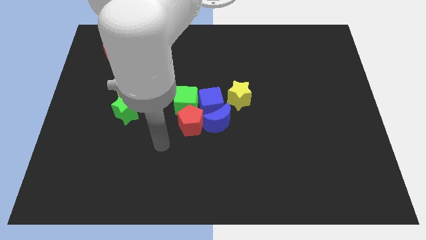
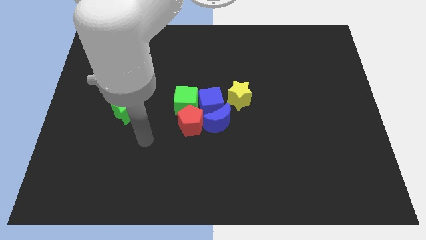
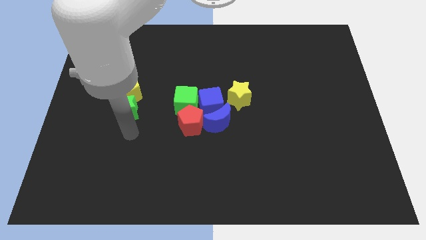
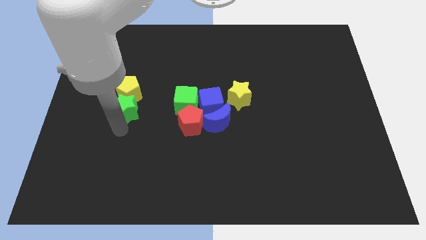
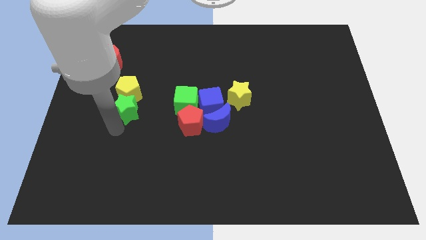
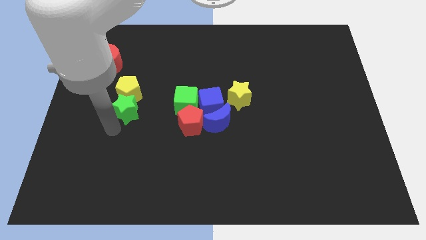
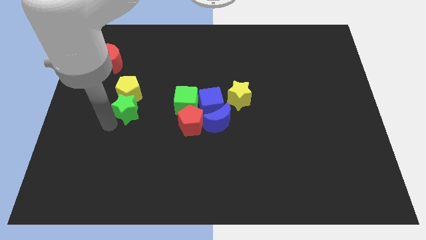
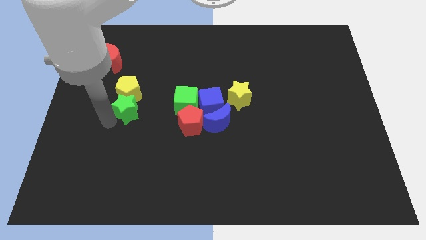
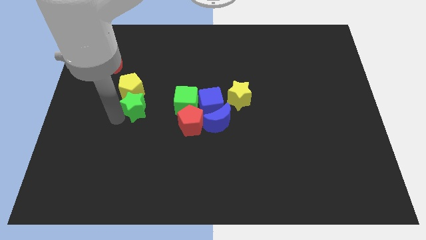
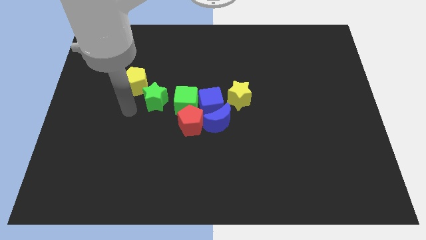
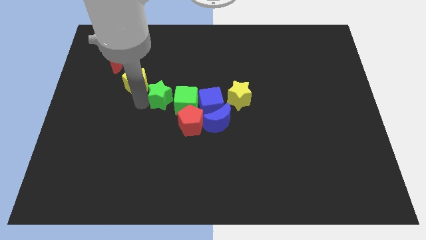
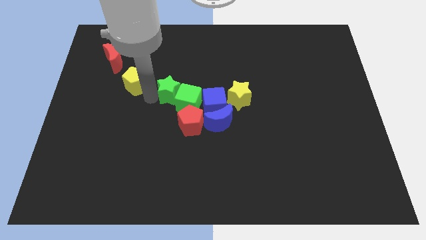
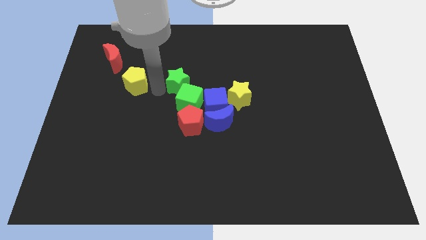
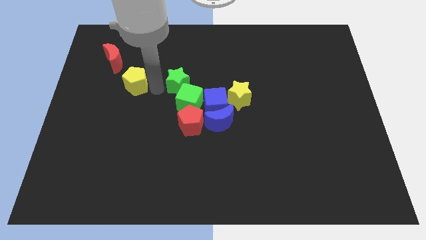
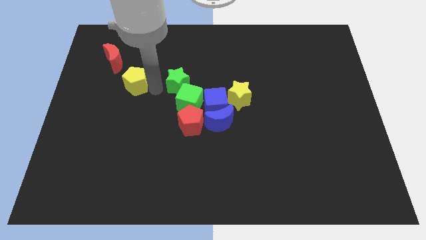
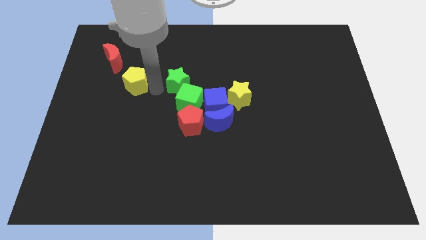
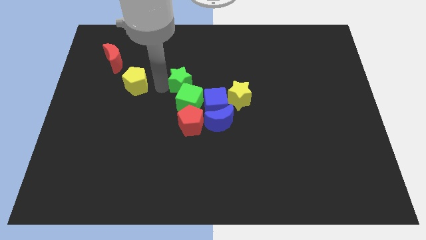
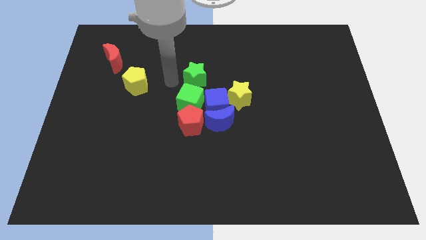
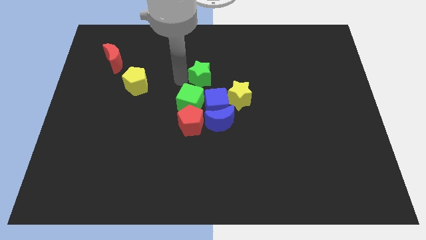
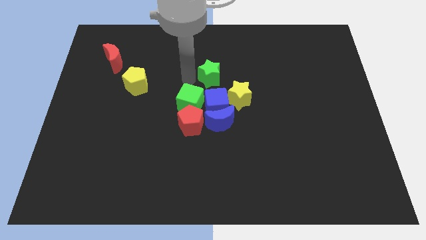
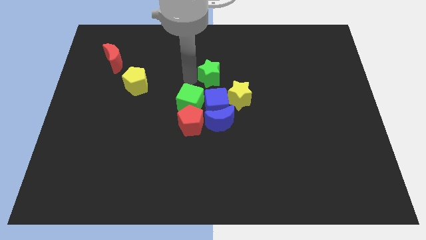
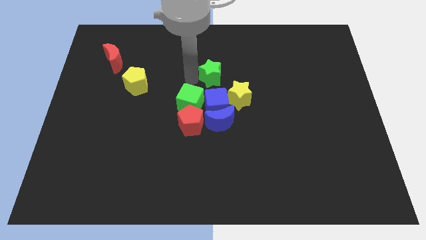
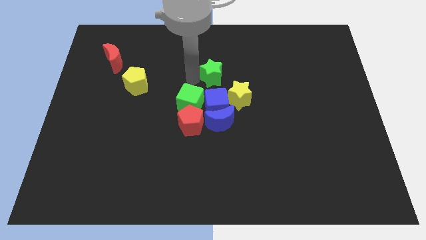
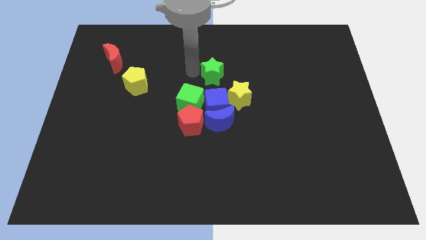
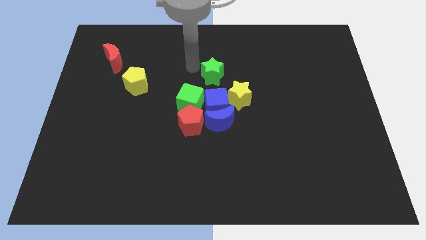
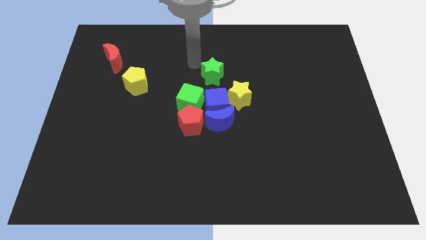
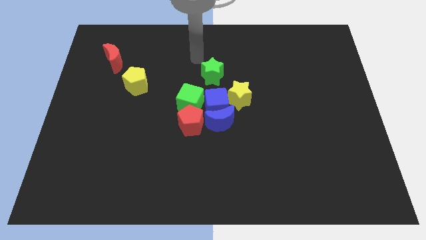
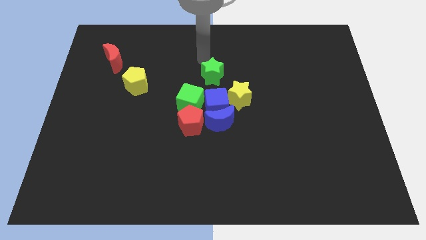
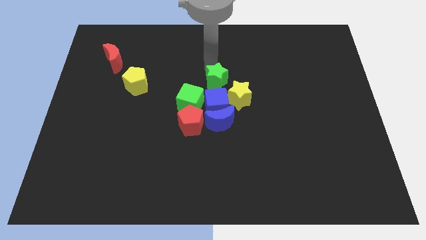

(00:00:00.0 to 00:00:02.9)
place the green star at the top of the blue cube

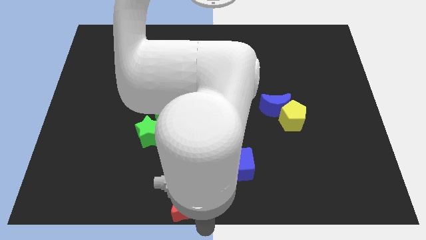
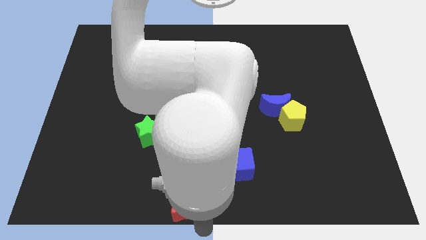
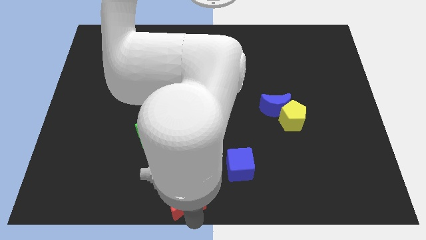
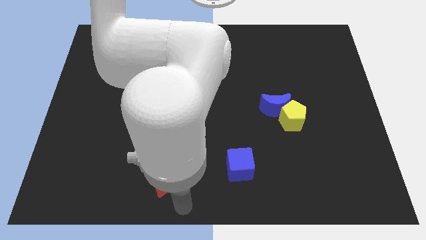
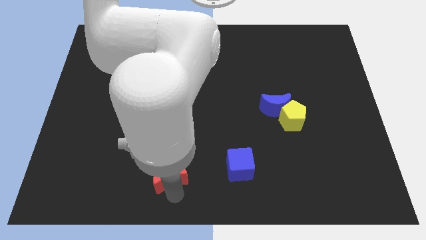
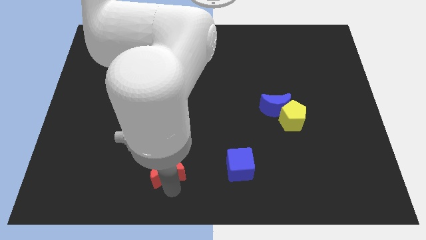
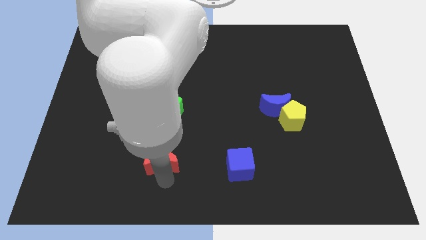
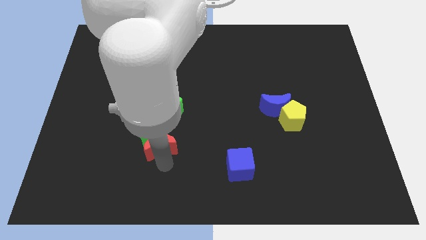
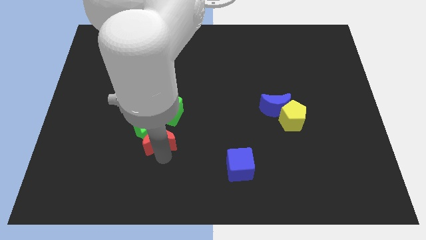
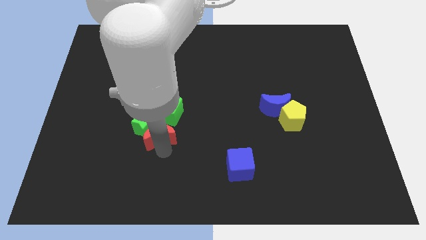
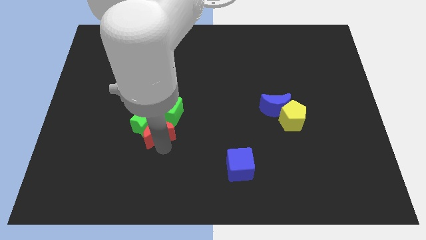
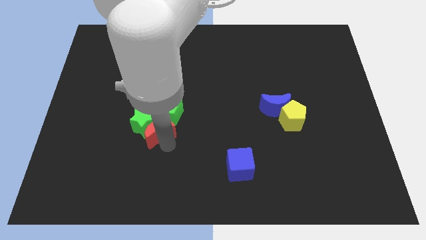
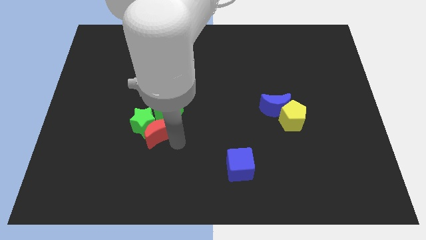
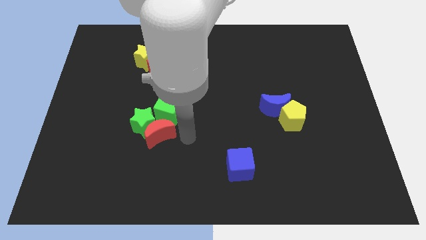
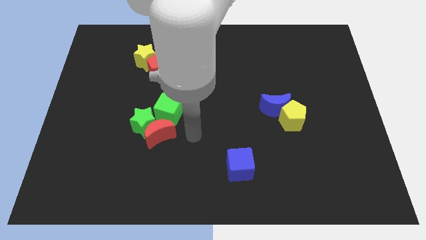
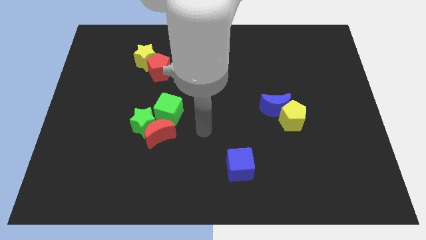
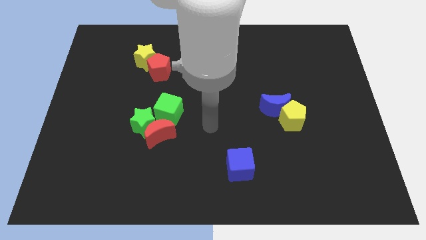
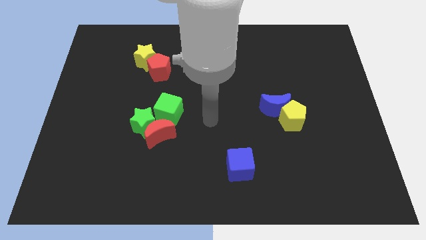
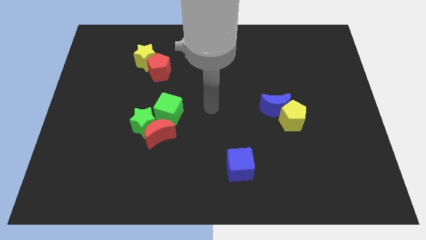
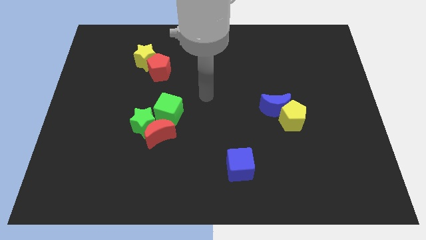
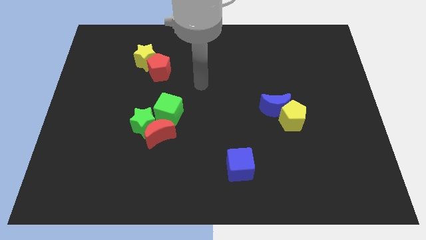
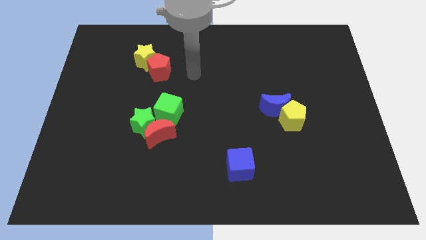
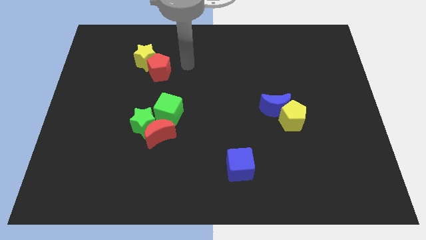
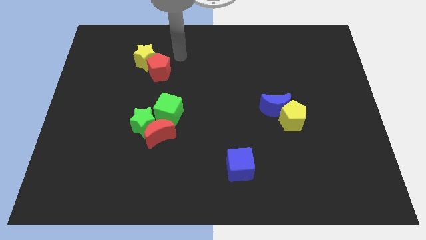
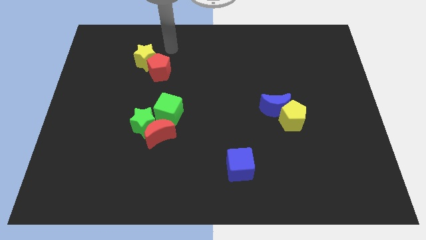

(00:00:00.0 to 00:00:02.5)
push the red crescent into the green blocks

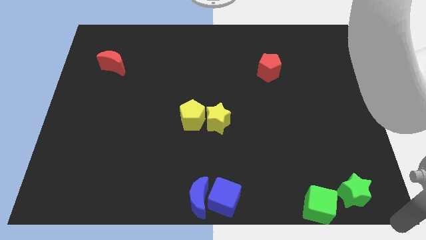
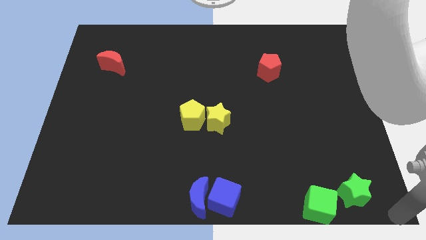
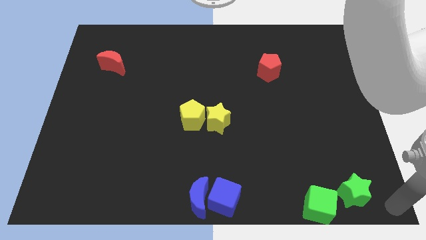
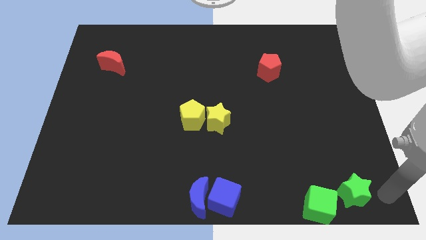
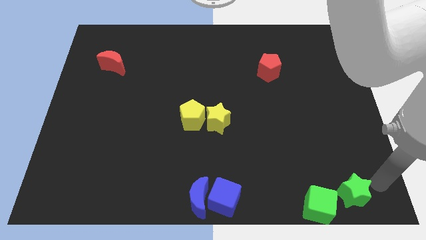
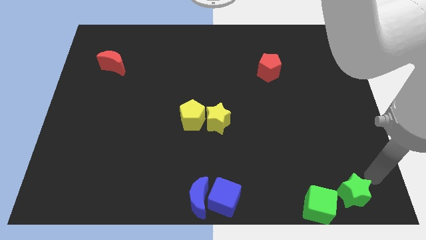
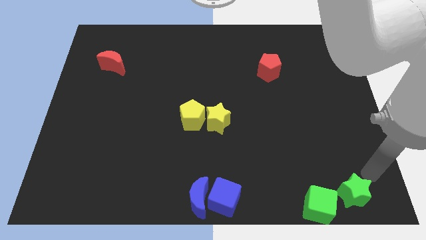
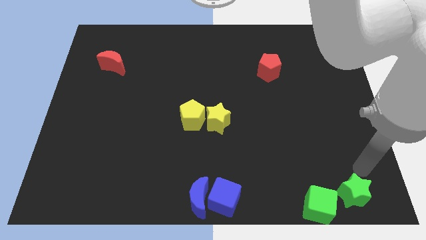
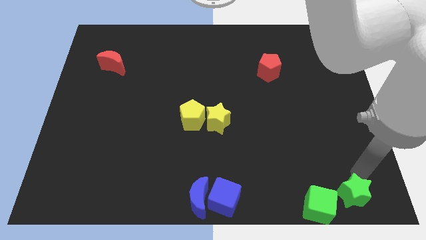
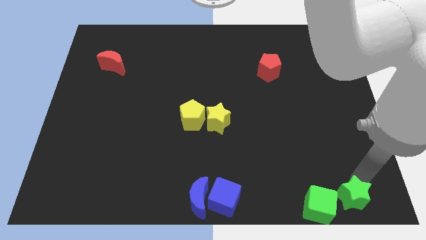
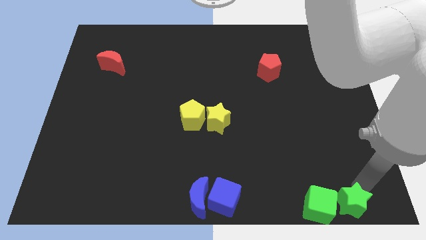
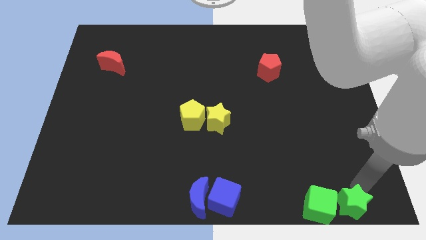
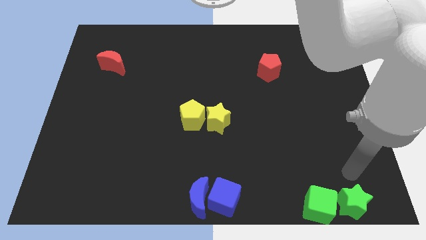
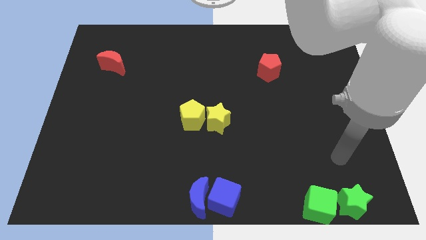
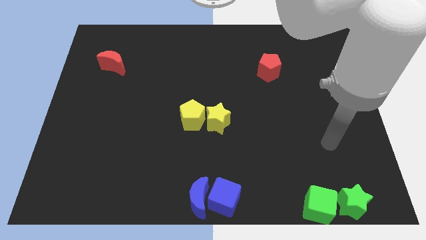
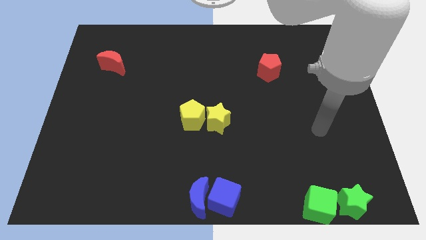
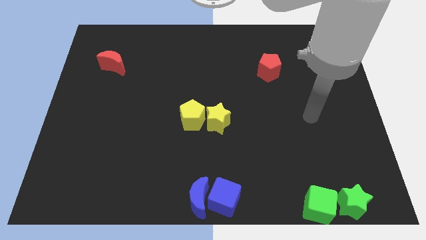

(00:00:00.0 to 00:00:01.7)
place the green star to the right of the green cube

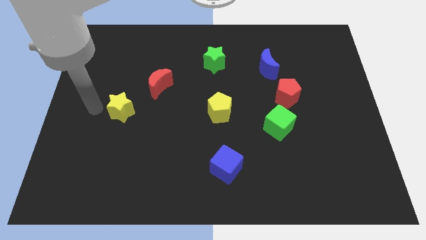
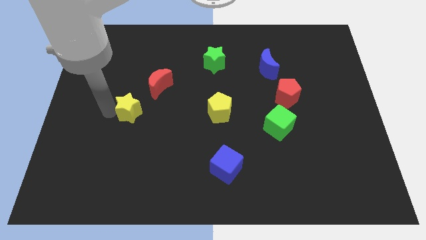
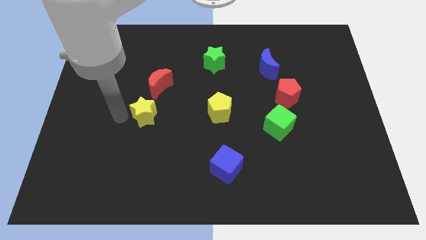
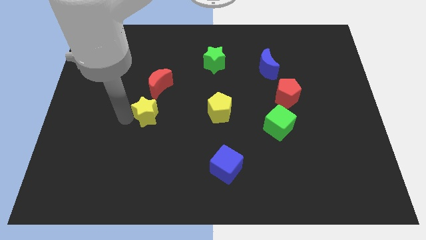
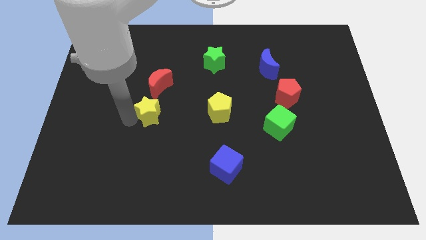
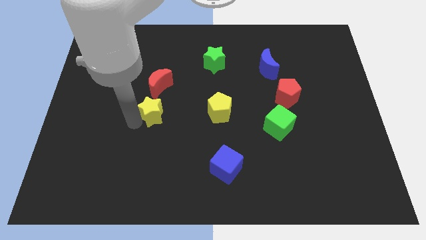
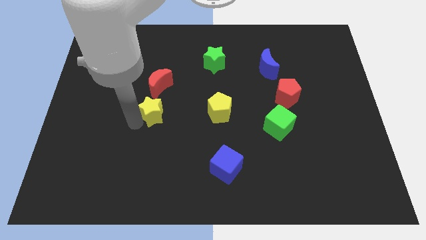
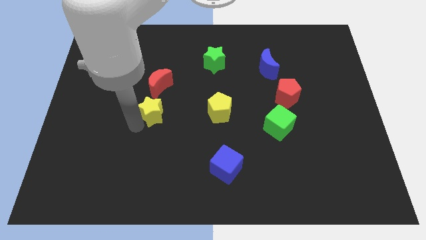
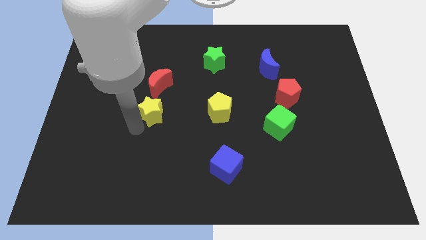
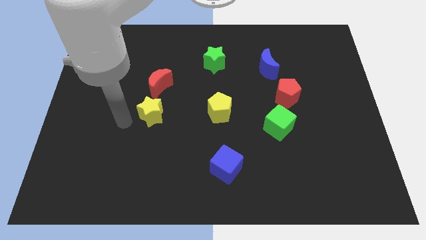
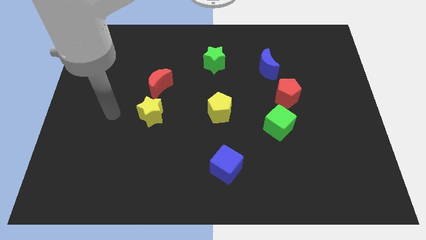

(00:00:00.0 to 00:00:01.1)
push the yellow star to the right

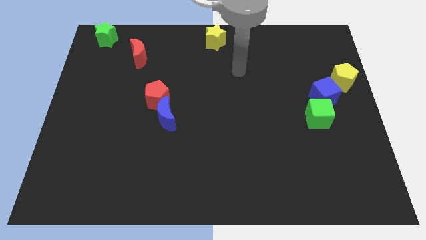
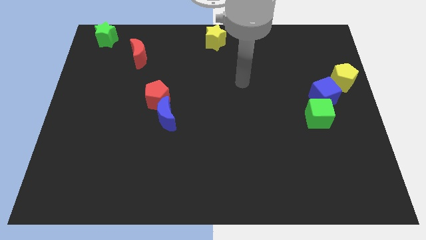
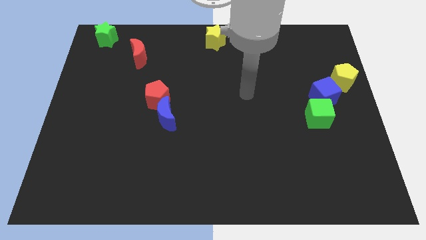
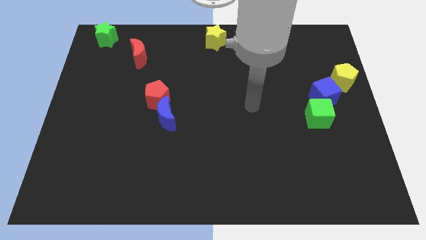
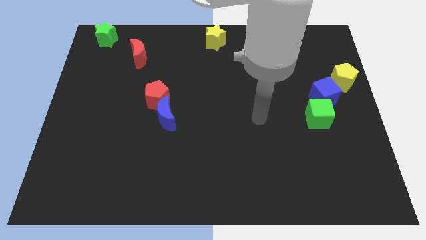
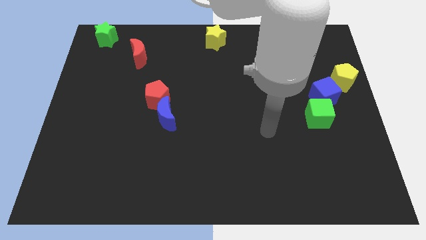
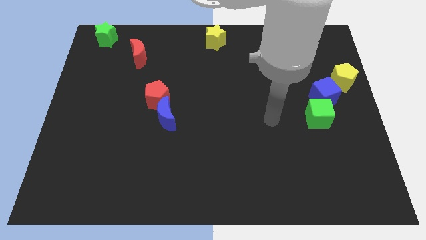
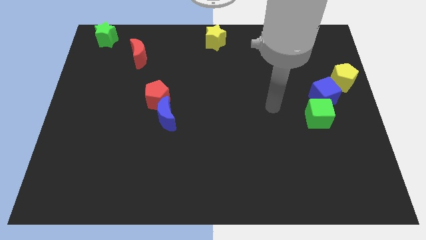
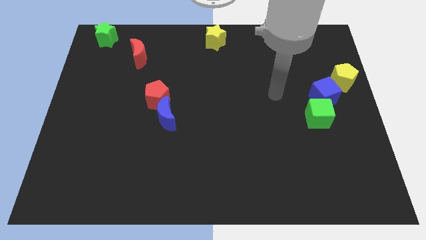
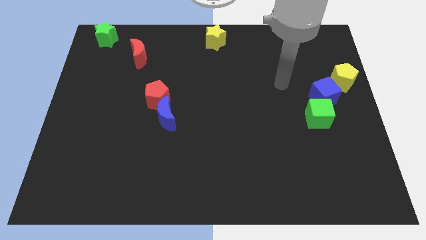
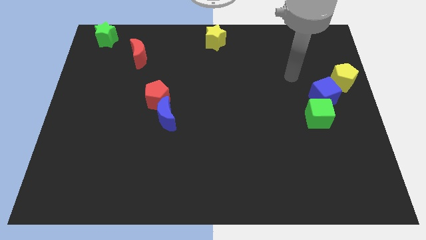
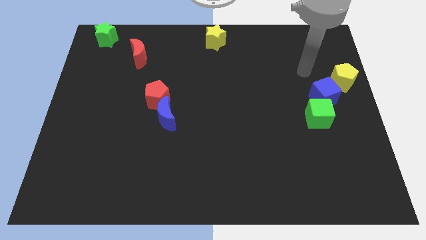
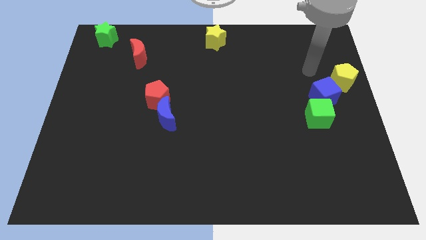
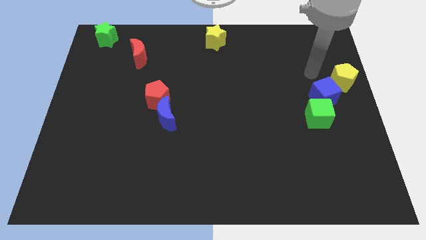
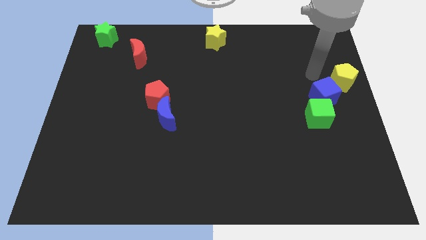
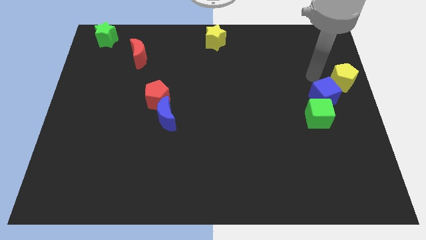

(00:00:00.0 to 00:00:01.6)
move your arm to the top of blue cube
